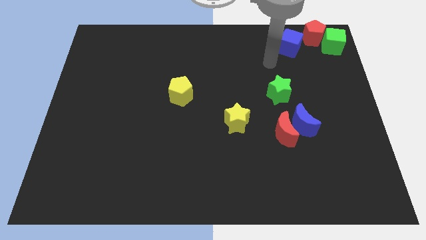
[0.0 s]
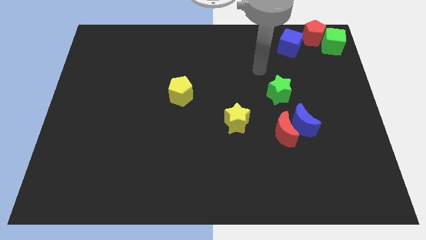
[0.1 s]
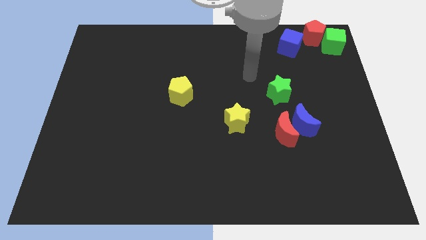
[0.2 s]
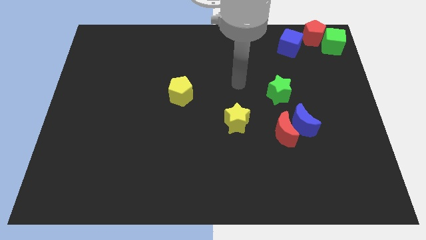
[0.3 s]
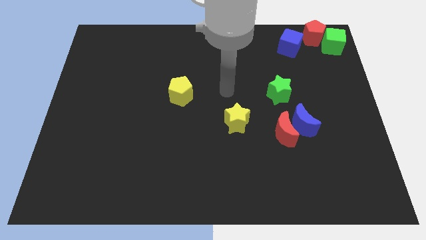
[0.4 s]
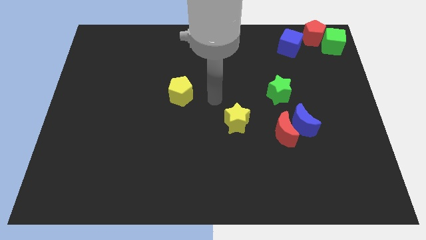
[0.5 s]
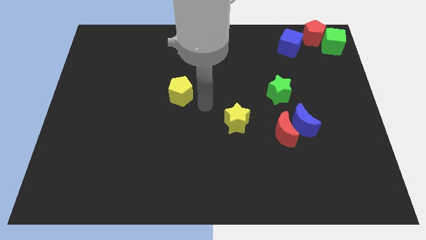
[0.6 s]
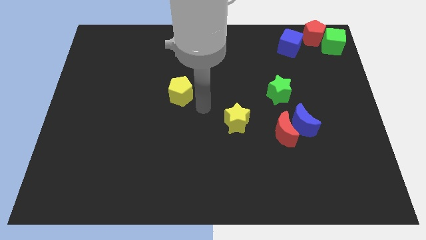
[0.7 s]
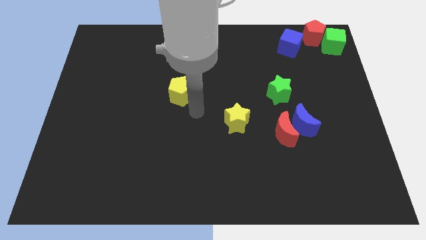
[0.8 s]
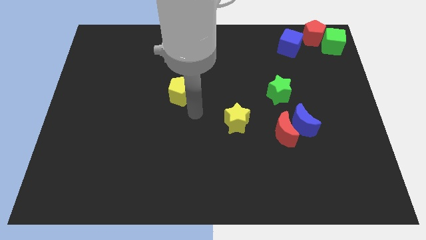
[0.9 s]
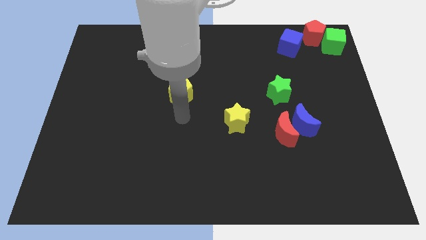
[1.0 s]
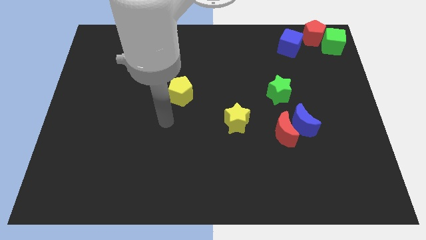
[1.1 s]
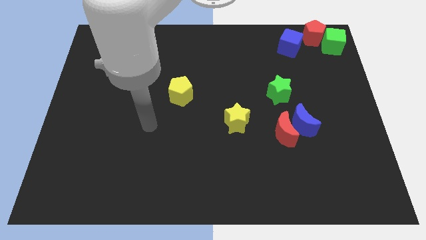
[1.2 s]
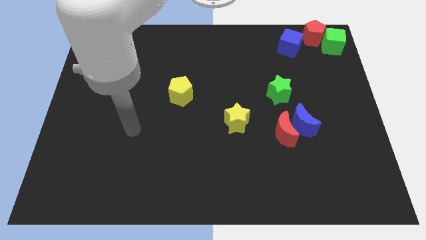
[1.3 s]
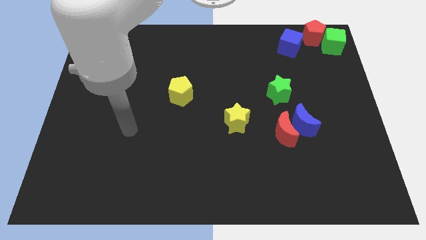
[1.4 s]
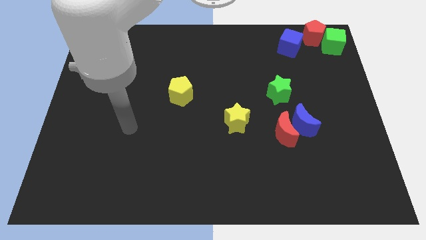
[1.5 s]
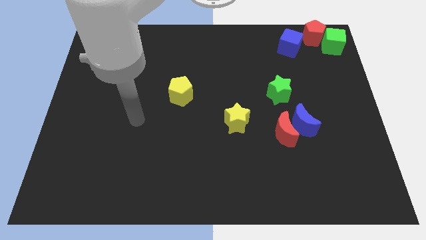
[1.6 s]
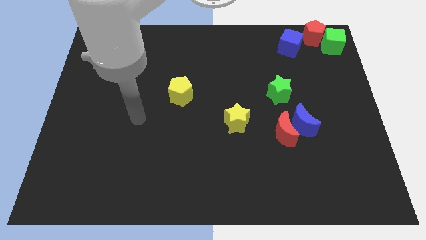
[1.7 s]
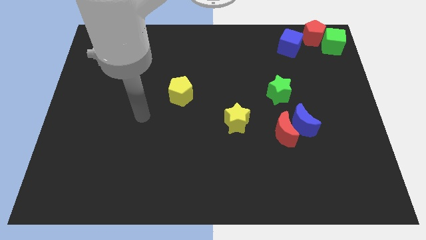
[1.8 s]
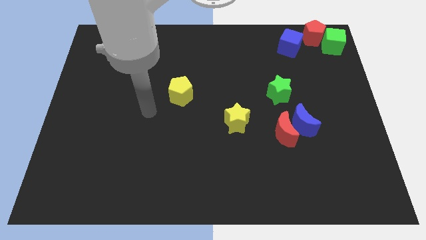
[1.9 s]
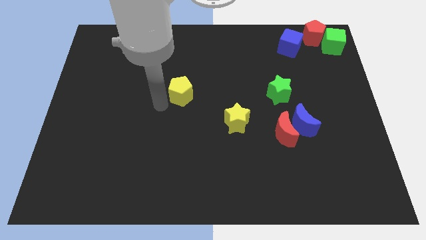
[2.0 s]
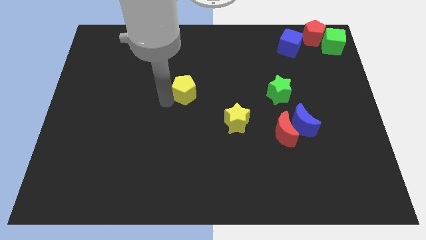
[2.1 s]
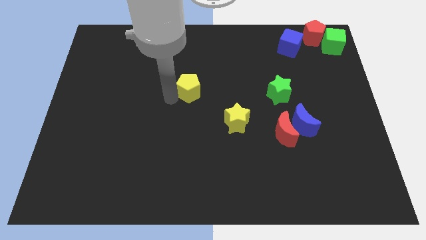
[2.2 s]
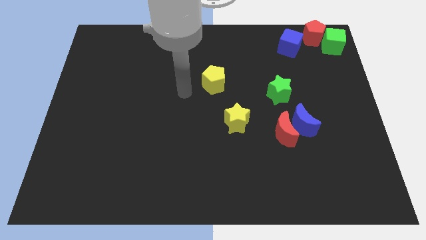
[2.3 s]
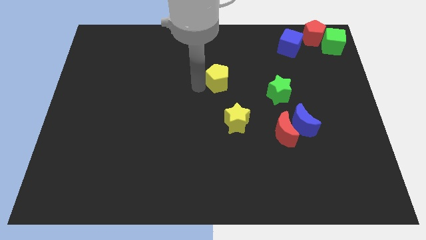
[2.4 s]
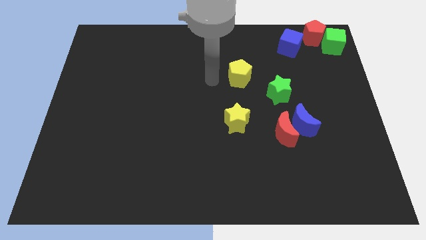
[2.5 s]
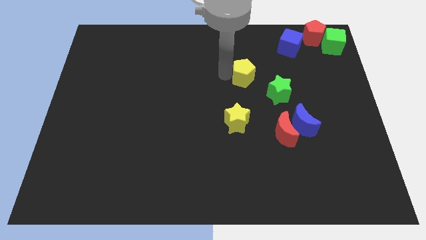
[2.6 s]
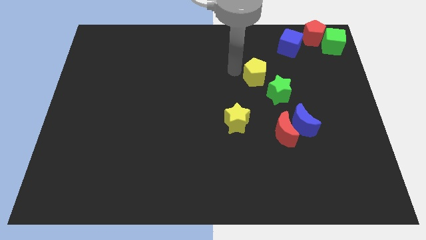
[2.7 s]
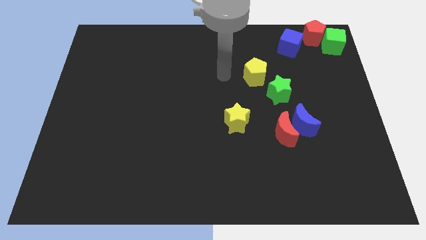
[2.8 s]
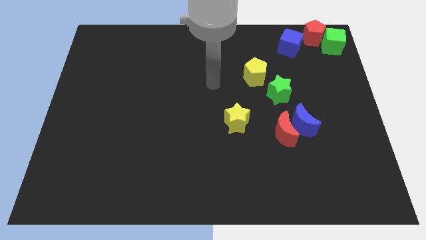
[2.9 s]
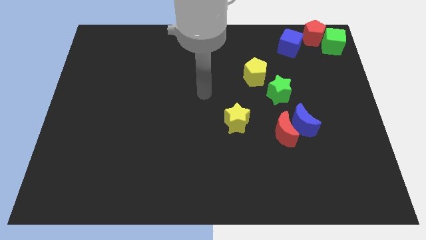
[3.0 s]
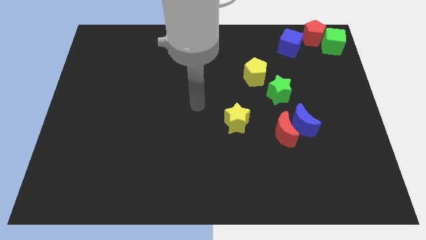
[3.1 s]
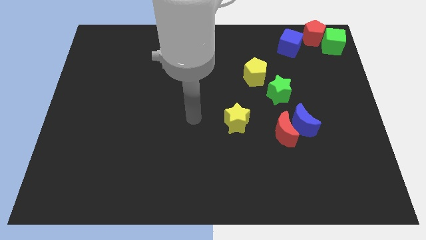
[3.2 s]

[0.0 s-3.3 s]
move the yellow pentagon to the top left of the green star

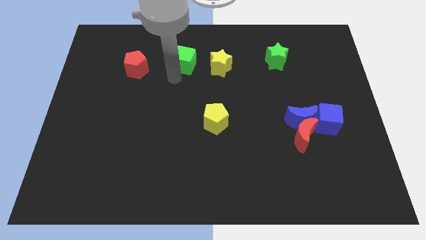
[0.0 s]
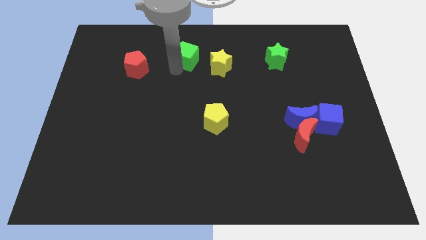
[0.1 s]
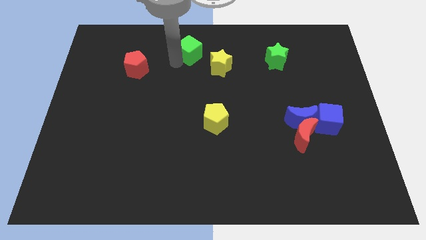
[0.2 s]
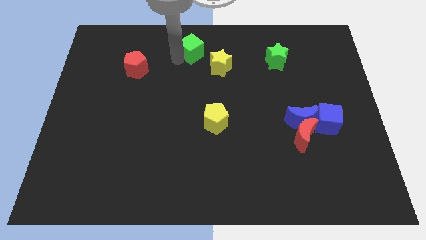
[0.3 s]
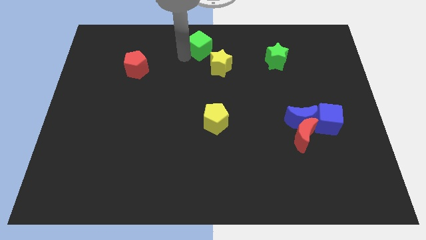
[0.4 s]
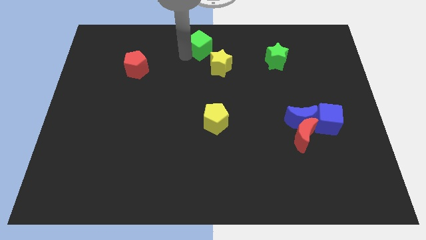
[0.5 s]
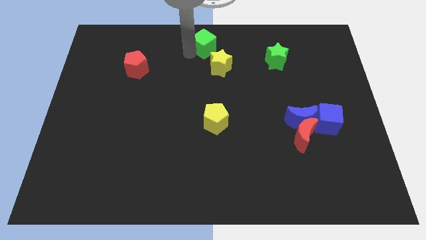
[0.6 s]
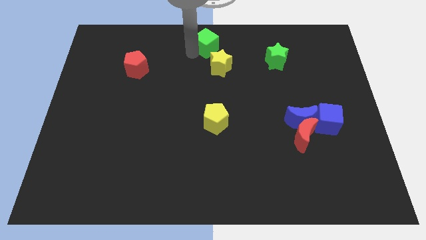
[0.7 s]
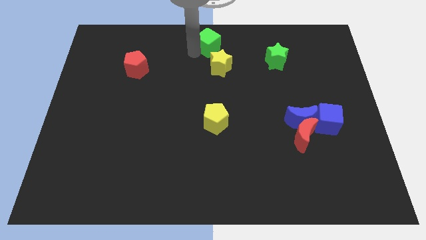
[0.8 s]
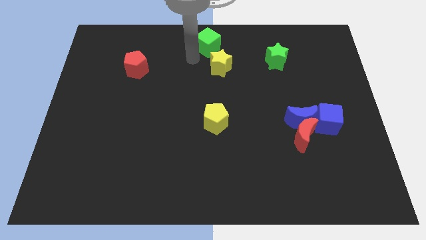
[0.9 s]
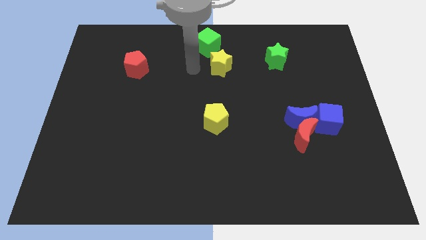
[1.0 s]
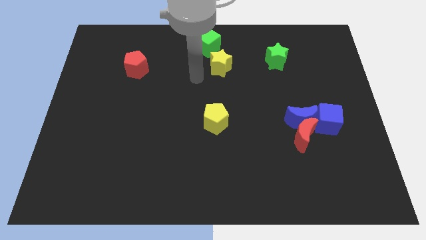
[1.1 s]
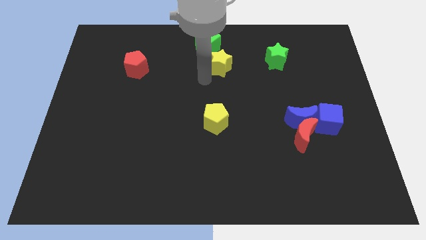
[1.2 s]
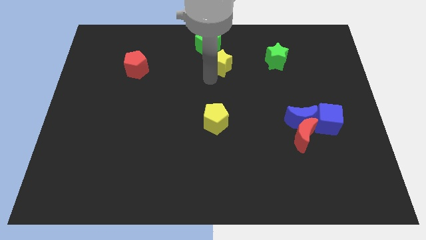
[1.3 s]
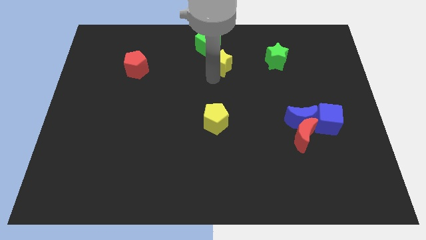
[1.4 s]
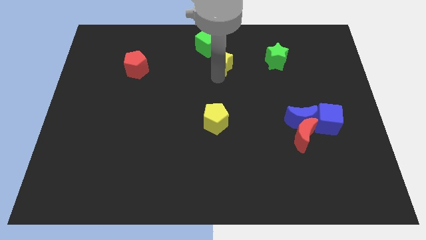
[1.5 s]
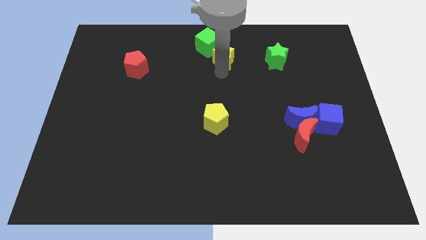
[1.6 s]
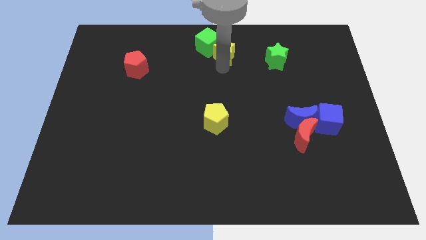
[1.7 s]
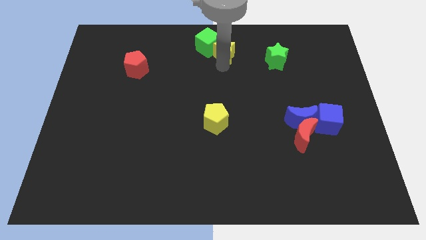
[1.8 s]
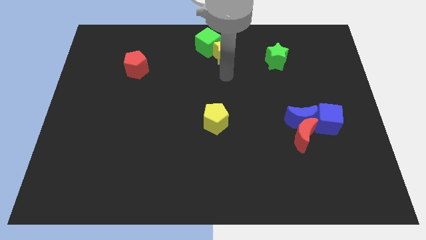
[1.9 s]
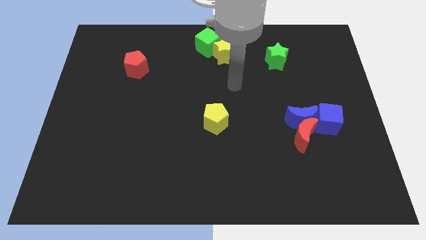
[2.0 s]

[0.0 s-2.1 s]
put the green cube and yellow star together

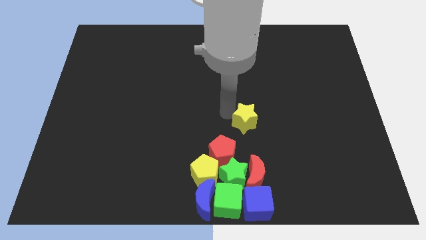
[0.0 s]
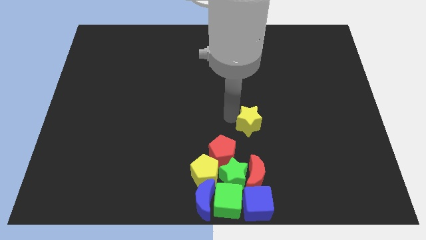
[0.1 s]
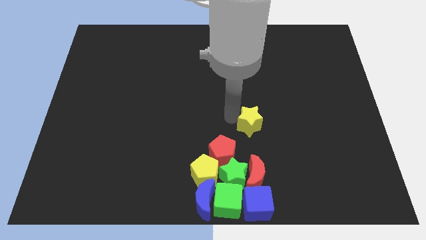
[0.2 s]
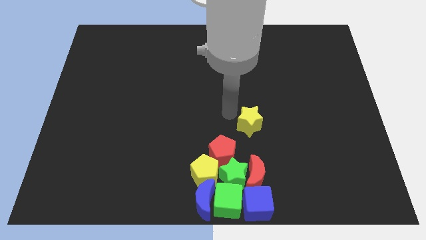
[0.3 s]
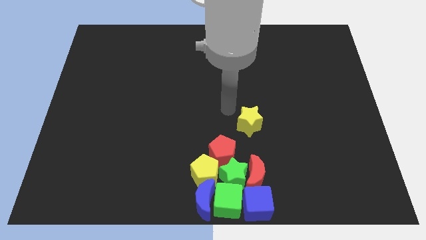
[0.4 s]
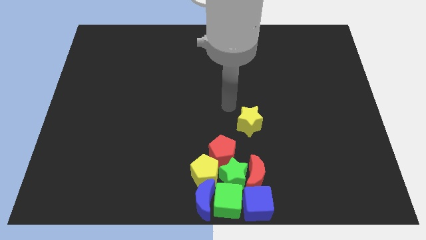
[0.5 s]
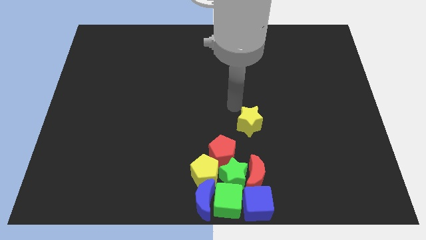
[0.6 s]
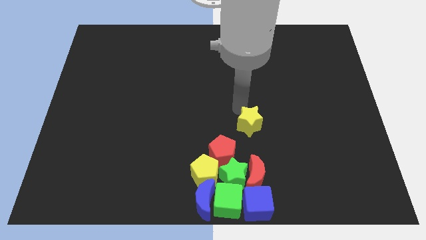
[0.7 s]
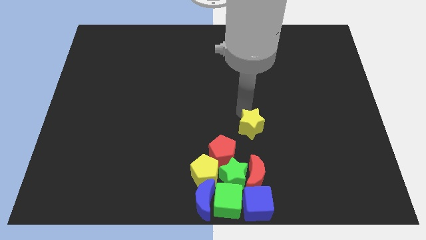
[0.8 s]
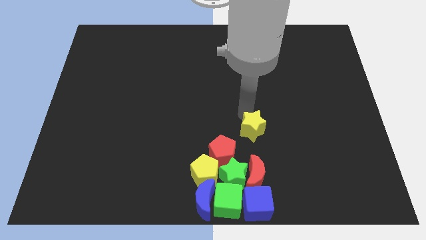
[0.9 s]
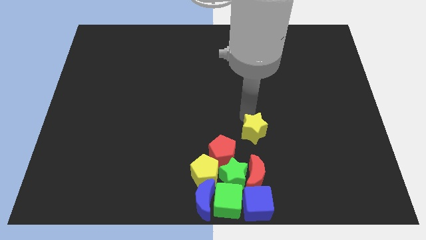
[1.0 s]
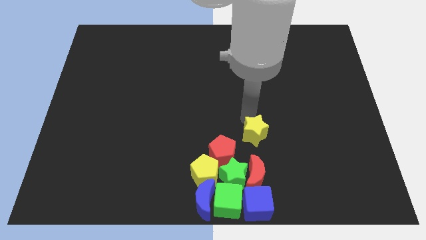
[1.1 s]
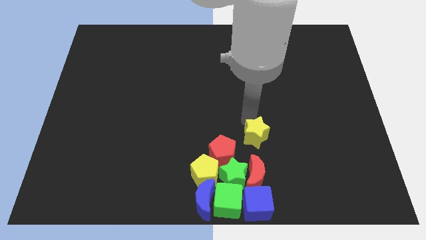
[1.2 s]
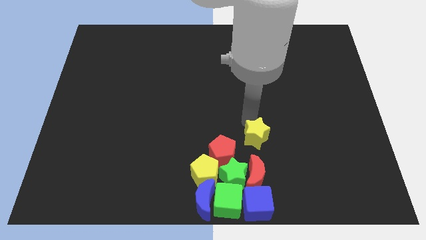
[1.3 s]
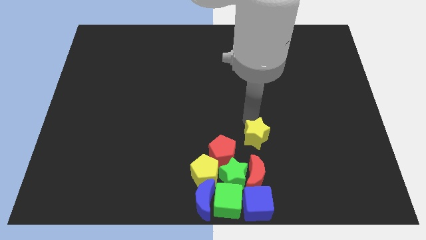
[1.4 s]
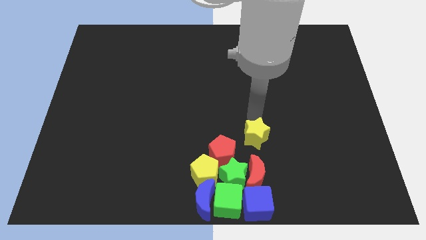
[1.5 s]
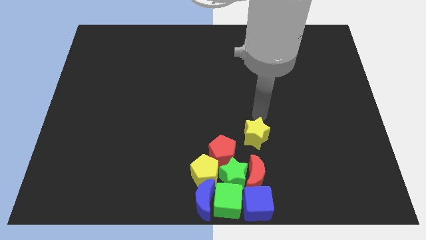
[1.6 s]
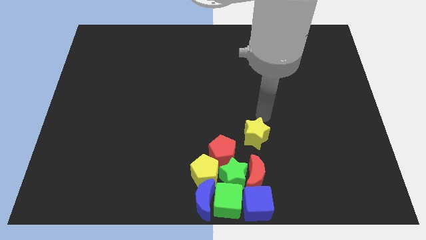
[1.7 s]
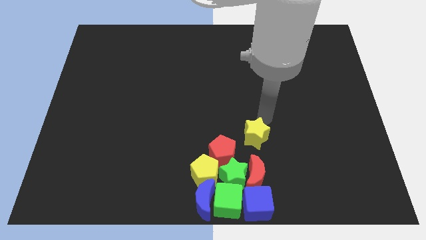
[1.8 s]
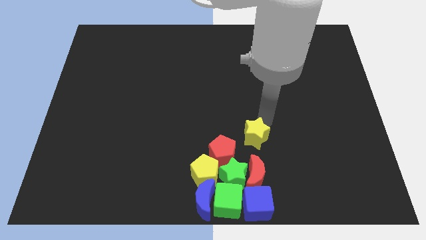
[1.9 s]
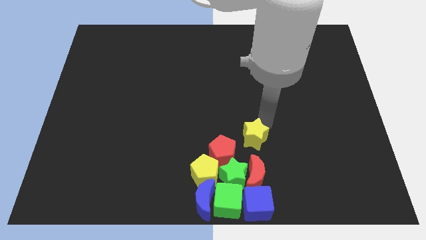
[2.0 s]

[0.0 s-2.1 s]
slide the yellow star diagonally top right to the green star

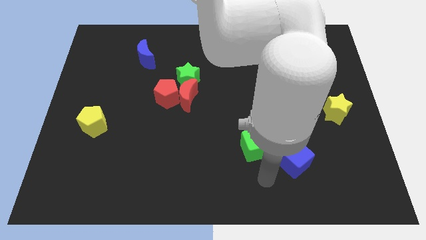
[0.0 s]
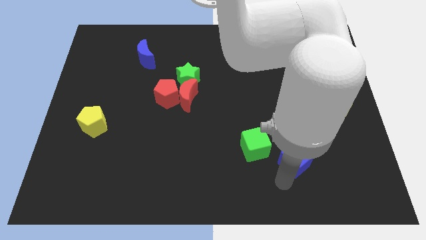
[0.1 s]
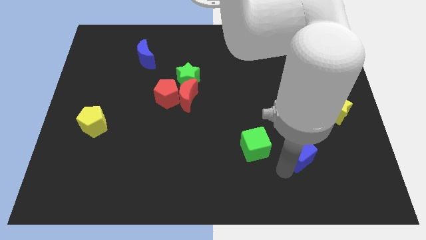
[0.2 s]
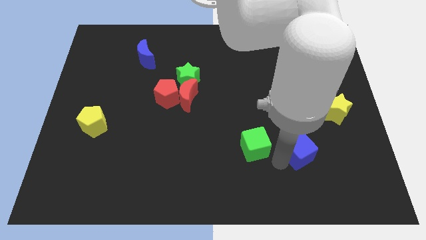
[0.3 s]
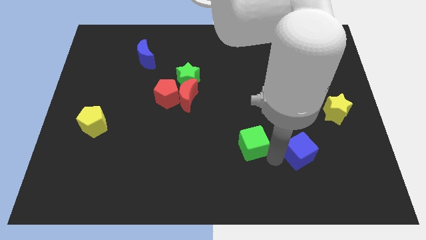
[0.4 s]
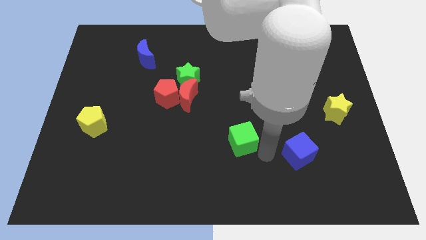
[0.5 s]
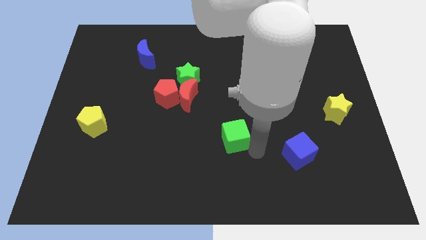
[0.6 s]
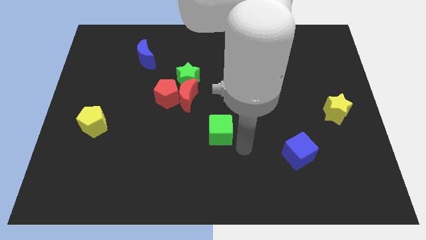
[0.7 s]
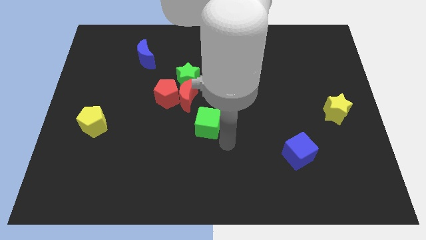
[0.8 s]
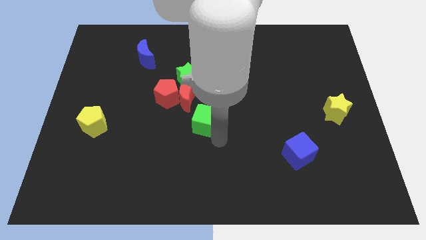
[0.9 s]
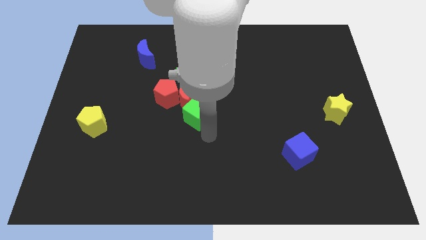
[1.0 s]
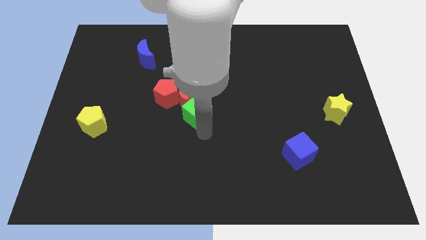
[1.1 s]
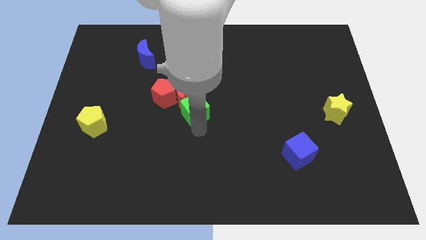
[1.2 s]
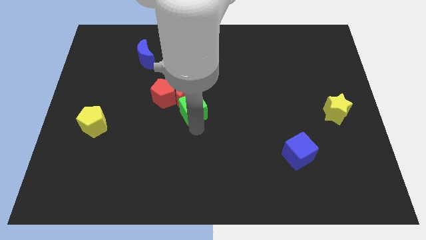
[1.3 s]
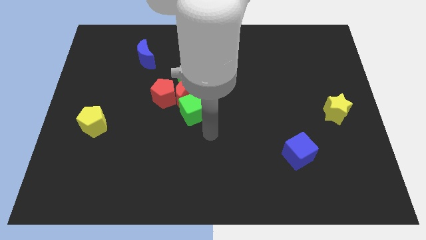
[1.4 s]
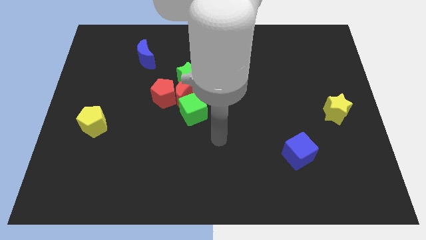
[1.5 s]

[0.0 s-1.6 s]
slide the green cube into the red moon
